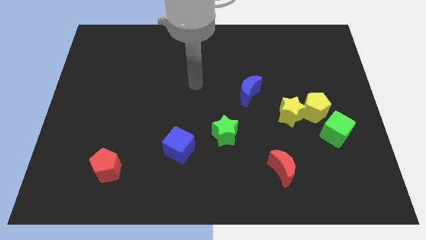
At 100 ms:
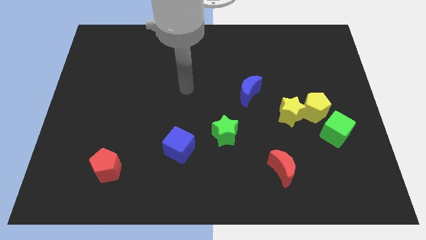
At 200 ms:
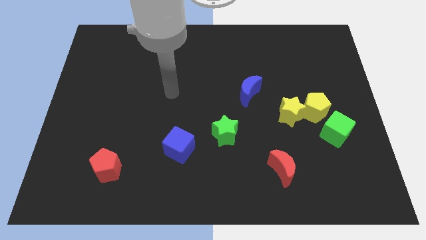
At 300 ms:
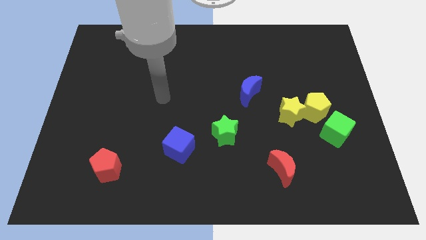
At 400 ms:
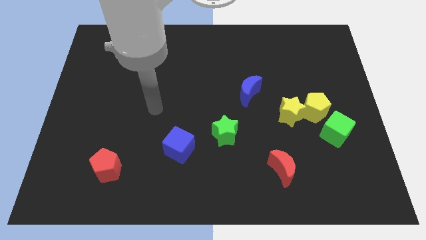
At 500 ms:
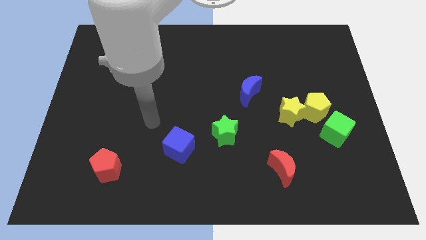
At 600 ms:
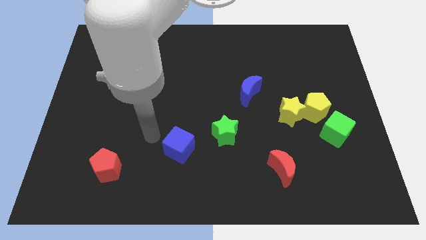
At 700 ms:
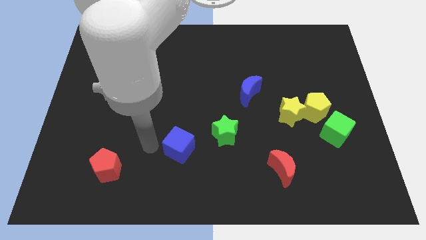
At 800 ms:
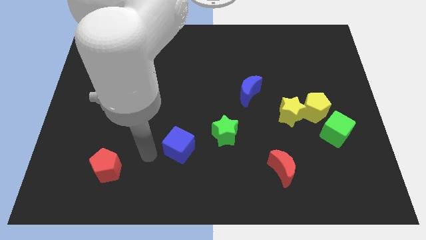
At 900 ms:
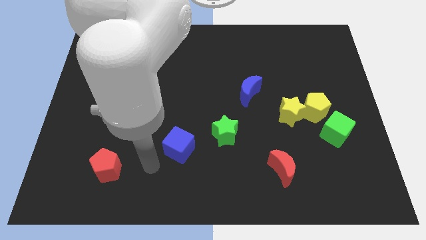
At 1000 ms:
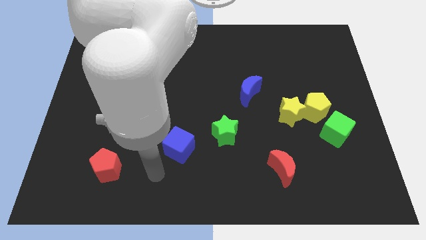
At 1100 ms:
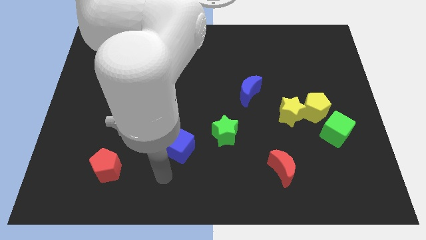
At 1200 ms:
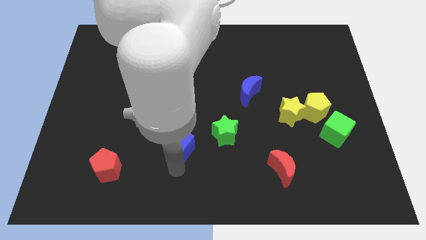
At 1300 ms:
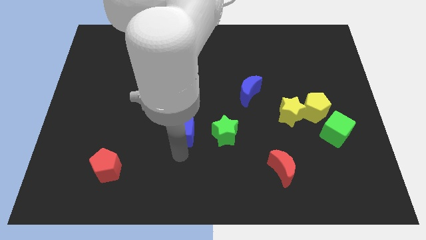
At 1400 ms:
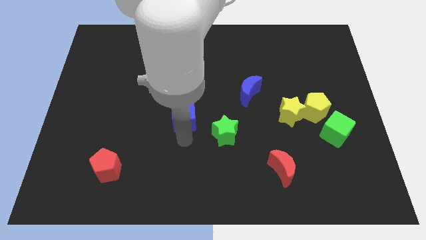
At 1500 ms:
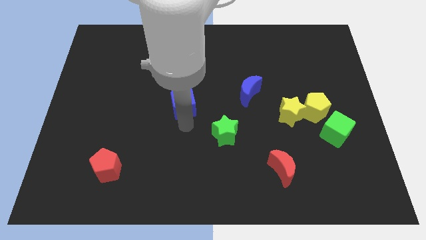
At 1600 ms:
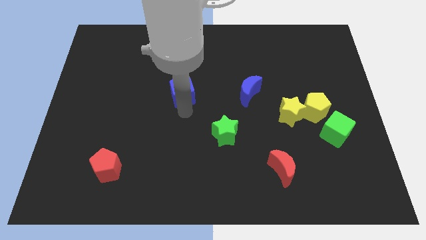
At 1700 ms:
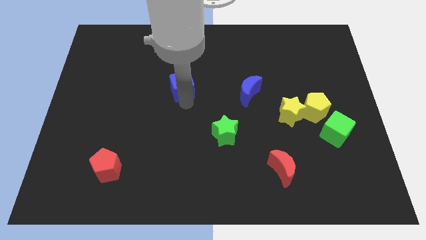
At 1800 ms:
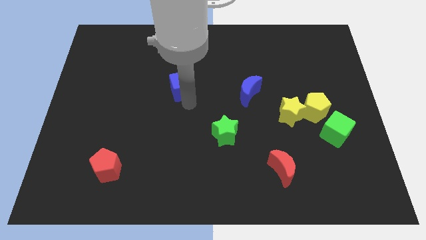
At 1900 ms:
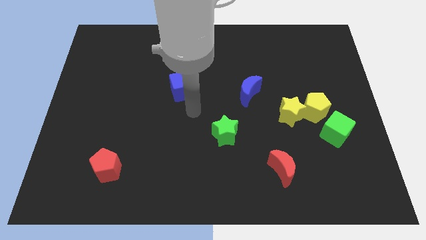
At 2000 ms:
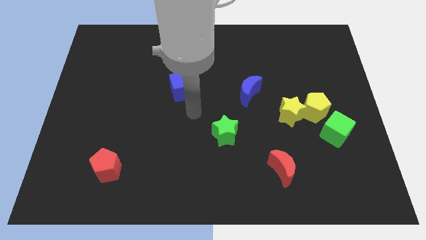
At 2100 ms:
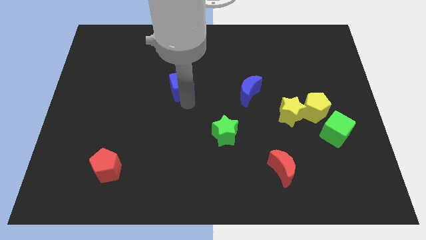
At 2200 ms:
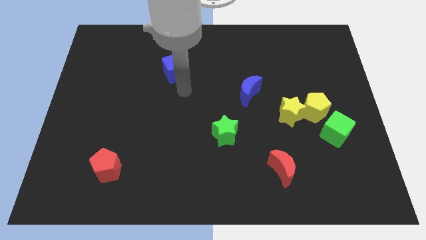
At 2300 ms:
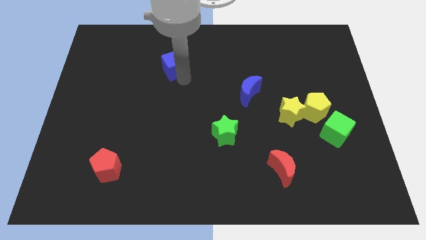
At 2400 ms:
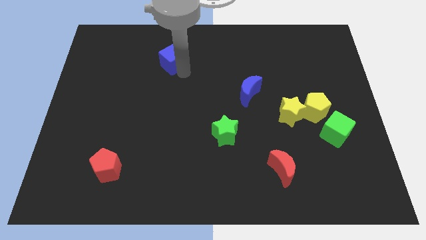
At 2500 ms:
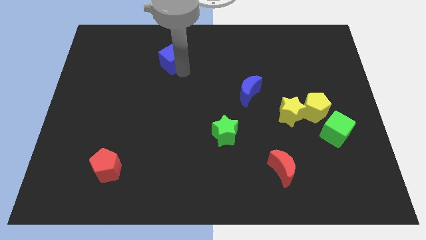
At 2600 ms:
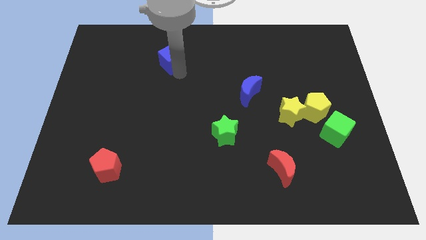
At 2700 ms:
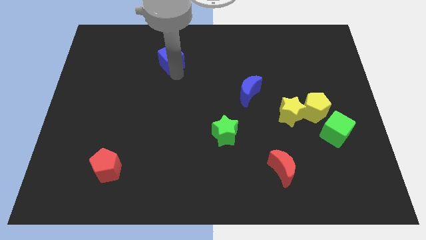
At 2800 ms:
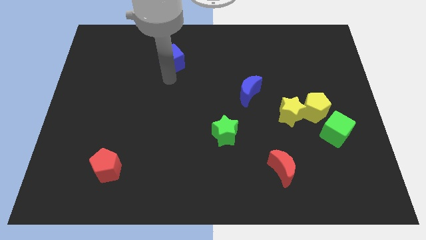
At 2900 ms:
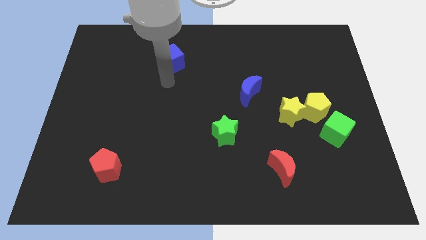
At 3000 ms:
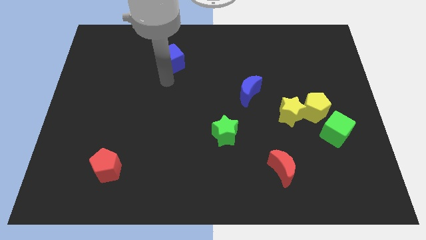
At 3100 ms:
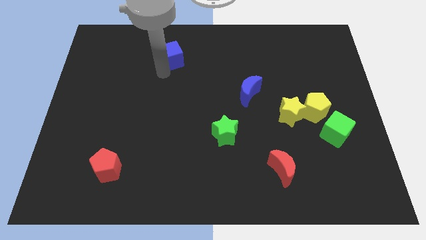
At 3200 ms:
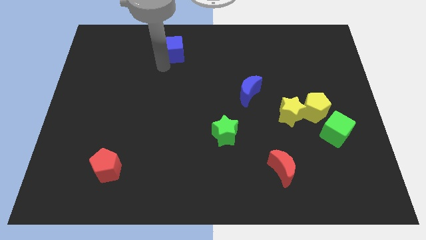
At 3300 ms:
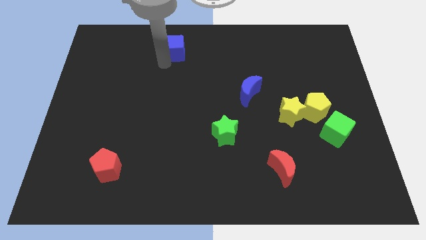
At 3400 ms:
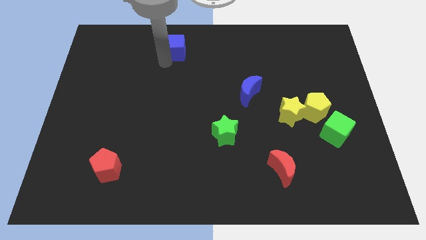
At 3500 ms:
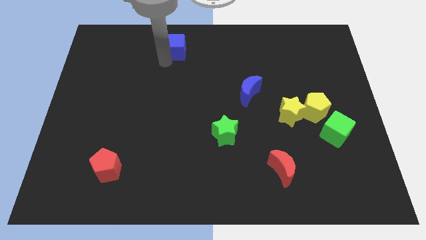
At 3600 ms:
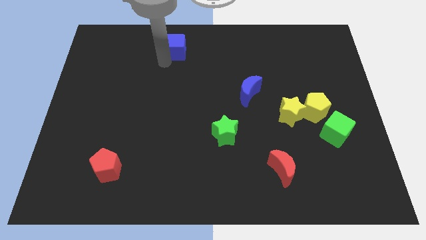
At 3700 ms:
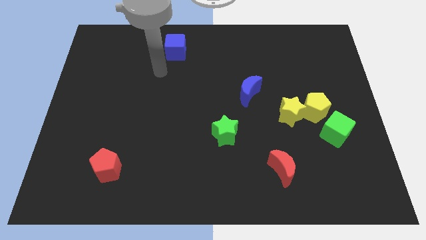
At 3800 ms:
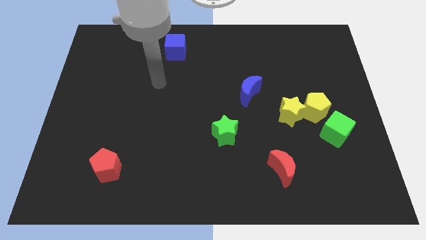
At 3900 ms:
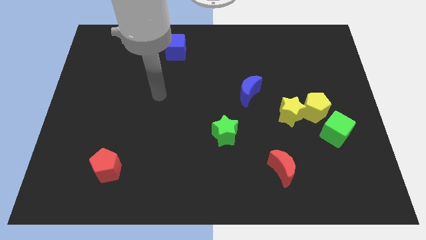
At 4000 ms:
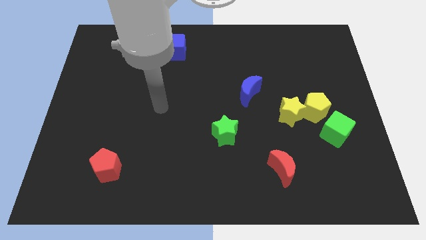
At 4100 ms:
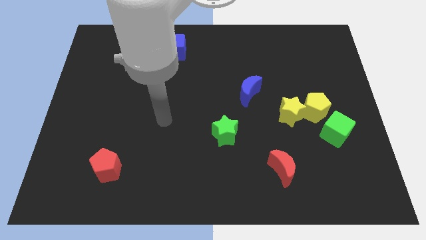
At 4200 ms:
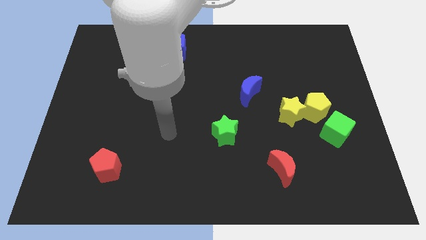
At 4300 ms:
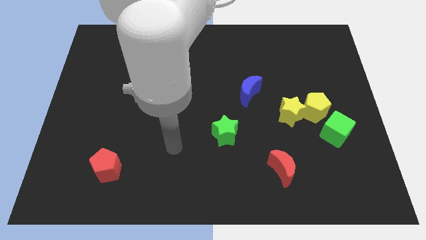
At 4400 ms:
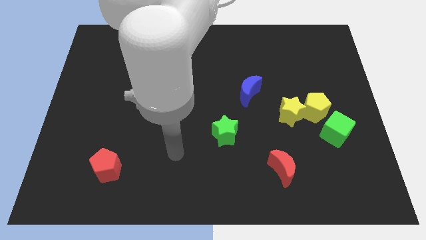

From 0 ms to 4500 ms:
push blue cube slightly to top left of the board

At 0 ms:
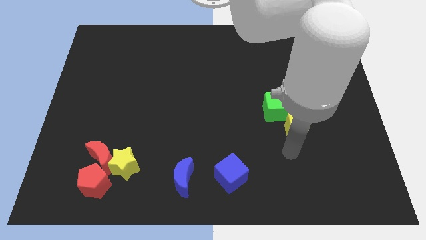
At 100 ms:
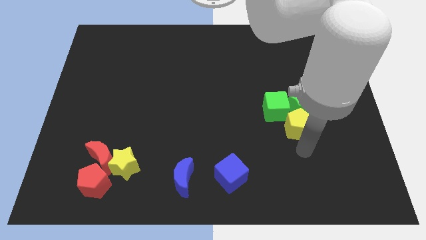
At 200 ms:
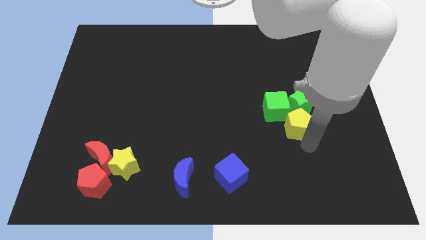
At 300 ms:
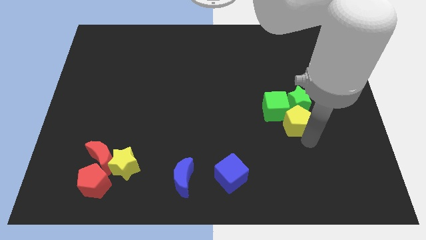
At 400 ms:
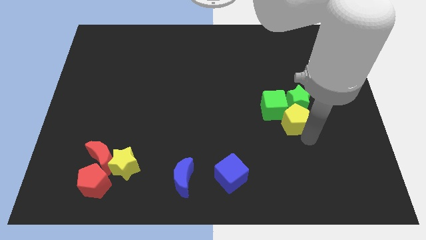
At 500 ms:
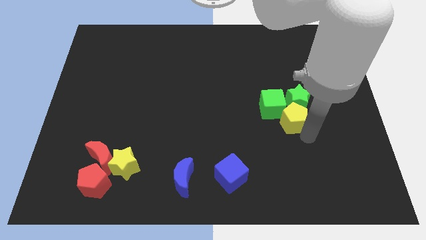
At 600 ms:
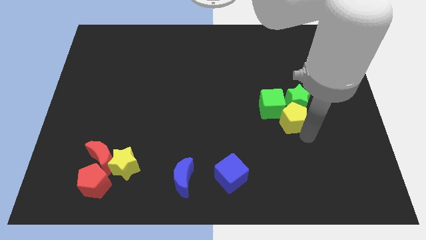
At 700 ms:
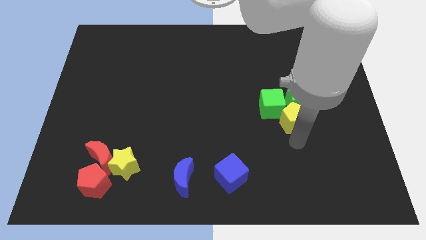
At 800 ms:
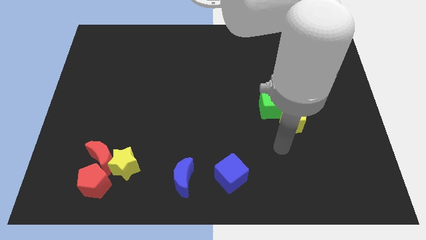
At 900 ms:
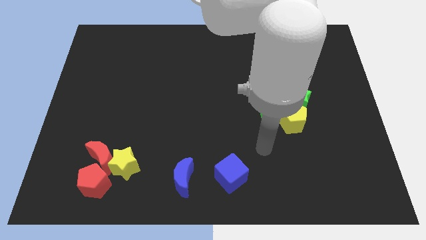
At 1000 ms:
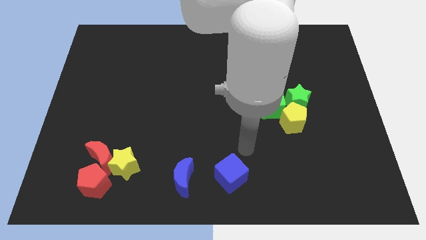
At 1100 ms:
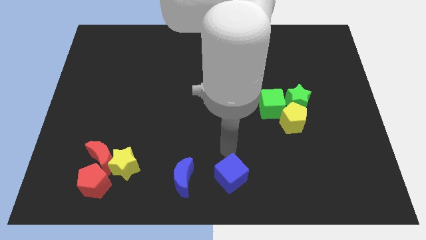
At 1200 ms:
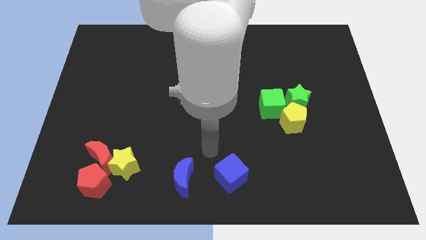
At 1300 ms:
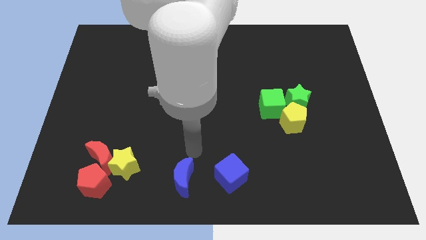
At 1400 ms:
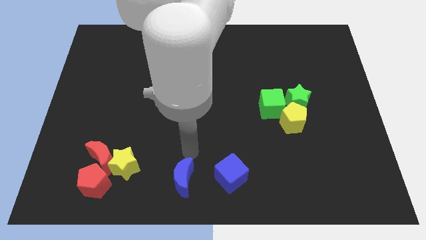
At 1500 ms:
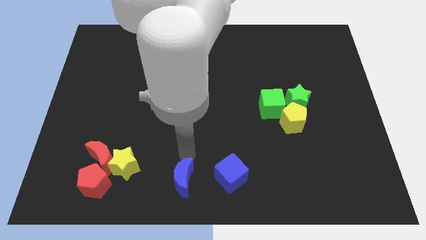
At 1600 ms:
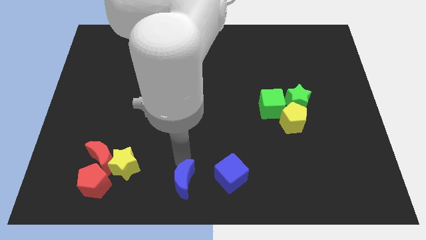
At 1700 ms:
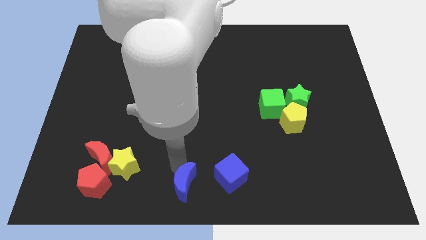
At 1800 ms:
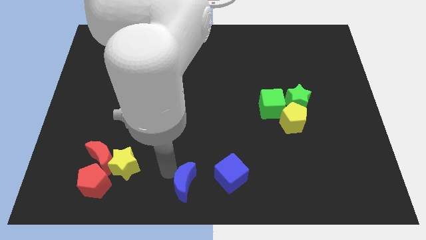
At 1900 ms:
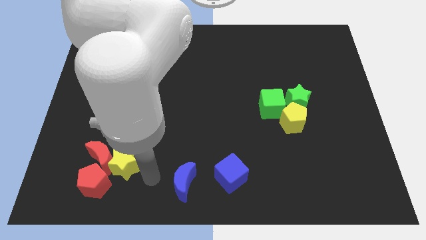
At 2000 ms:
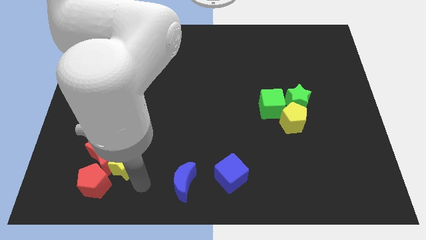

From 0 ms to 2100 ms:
move arm parallel to the blue moon

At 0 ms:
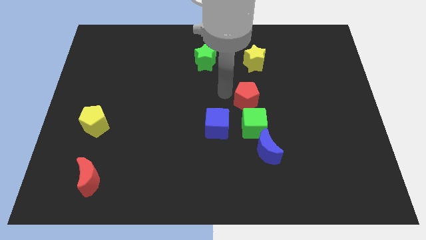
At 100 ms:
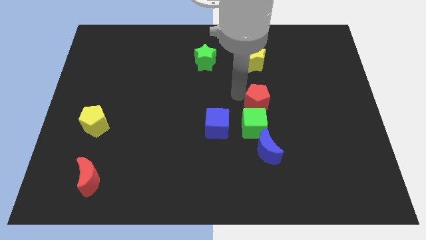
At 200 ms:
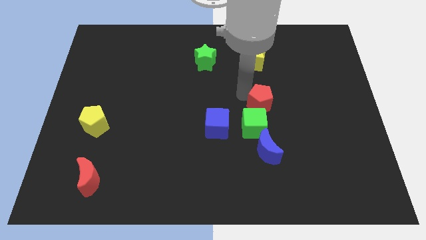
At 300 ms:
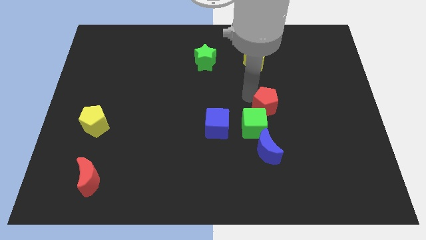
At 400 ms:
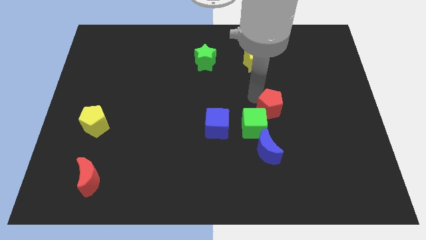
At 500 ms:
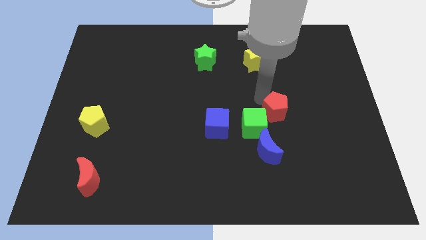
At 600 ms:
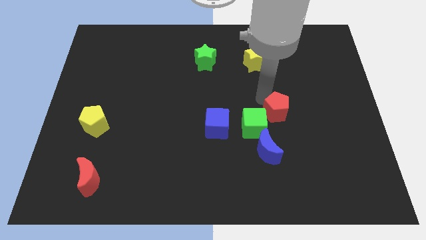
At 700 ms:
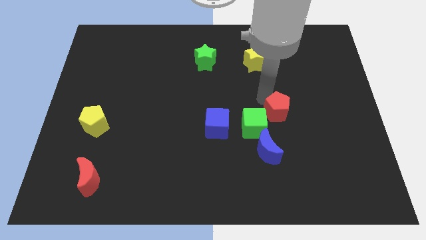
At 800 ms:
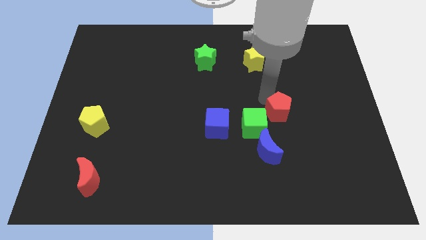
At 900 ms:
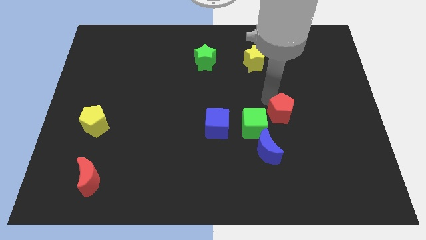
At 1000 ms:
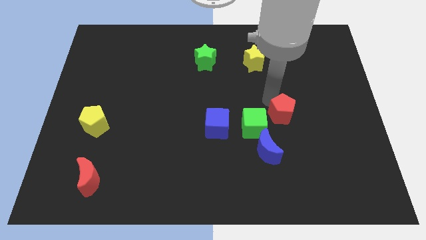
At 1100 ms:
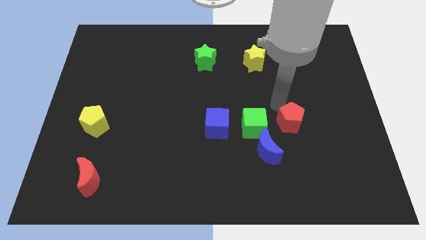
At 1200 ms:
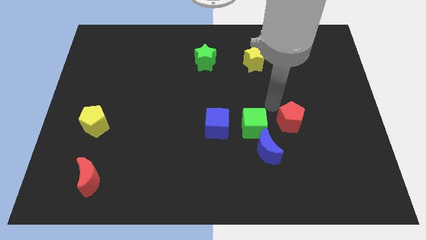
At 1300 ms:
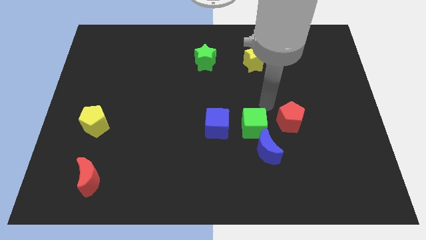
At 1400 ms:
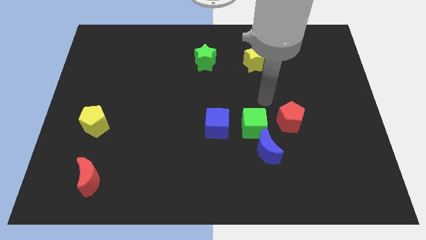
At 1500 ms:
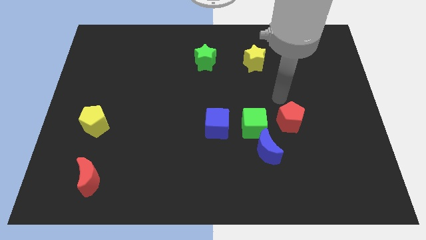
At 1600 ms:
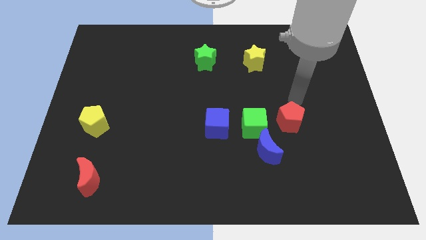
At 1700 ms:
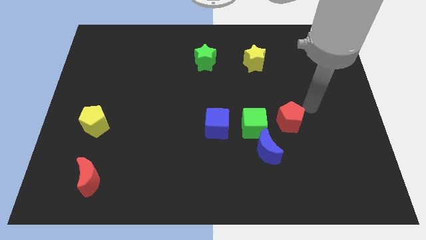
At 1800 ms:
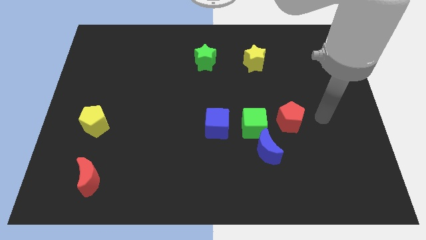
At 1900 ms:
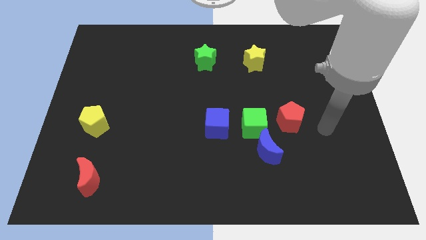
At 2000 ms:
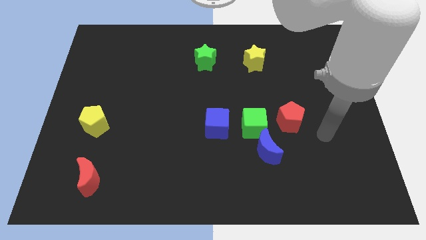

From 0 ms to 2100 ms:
push the red pentagon to the right of the green cube

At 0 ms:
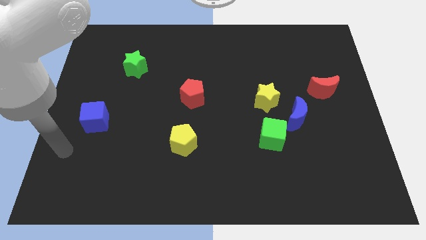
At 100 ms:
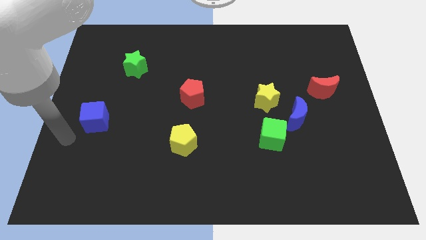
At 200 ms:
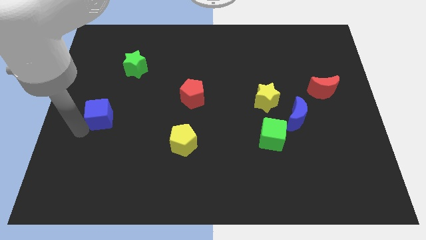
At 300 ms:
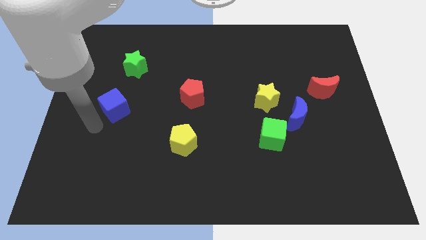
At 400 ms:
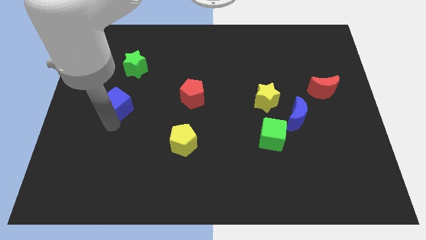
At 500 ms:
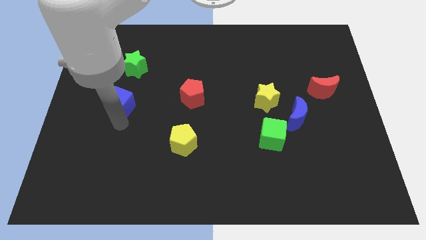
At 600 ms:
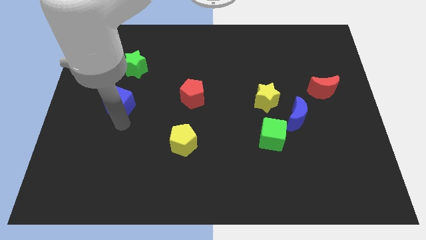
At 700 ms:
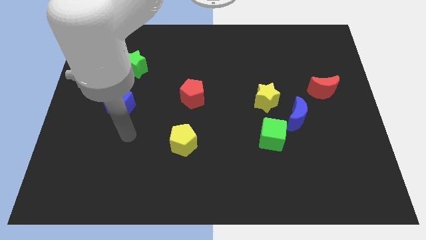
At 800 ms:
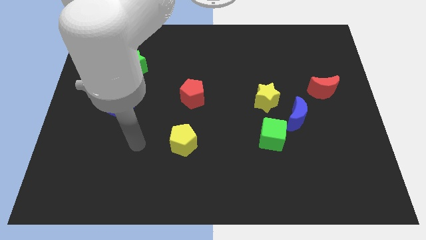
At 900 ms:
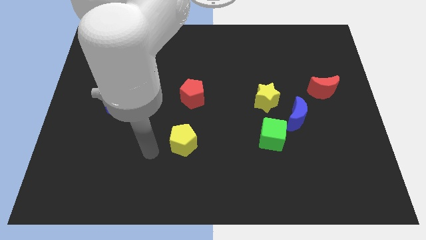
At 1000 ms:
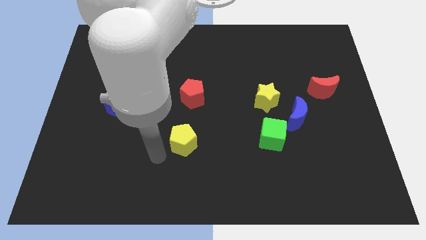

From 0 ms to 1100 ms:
slide blue cube below green star
